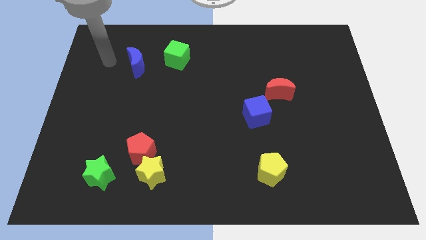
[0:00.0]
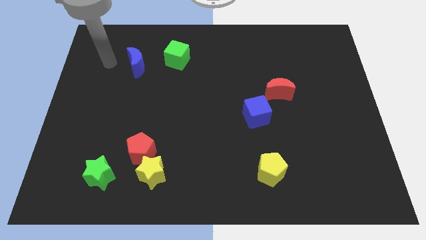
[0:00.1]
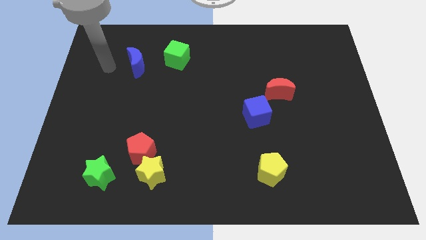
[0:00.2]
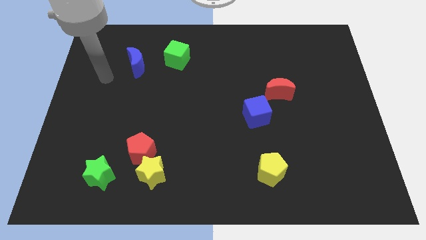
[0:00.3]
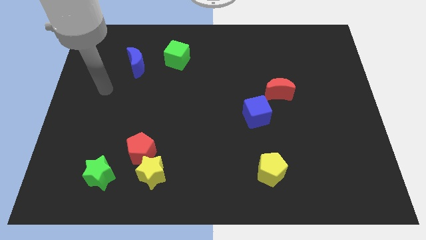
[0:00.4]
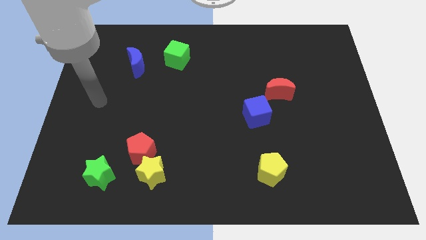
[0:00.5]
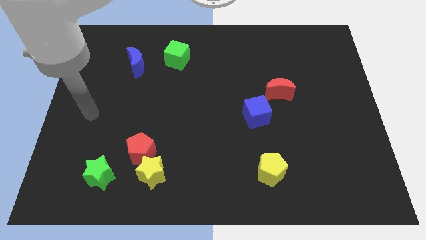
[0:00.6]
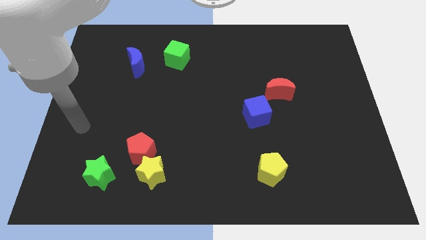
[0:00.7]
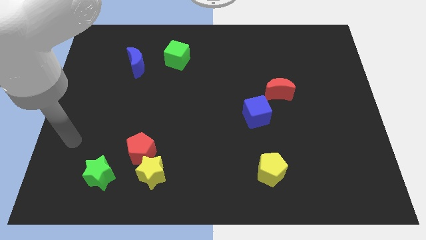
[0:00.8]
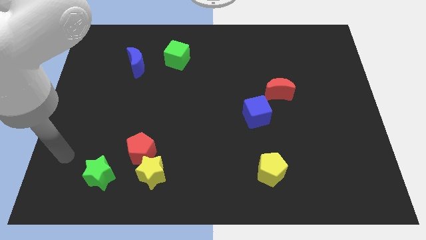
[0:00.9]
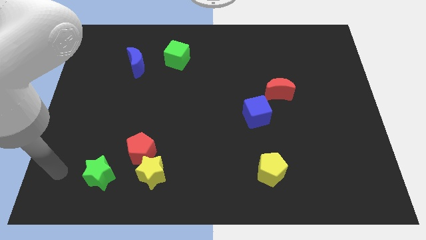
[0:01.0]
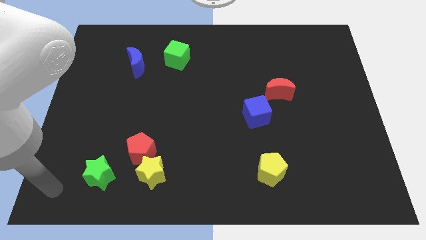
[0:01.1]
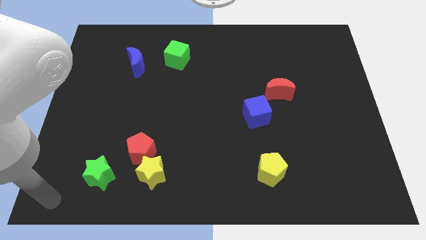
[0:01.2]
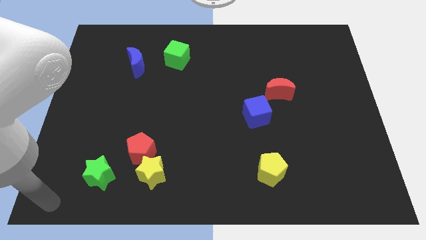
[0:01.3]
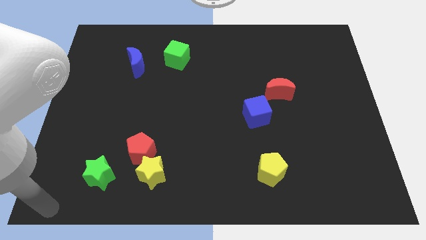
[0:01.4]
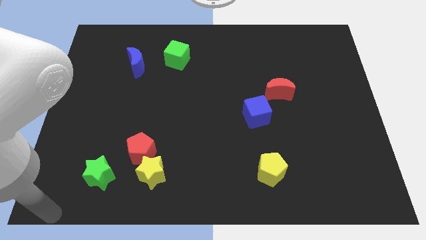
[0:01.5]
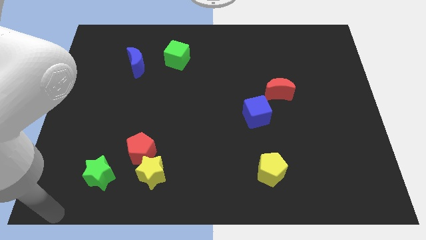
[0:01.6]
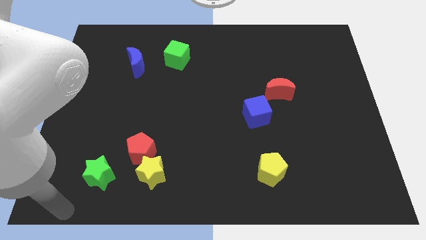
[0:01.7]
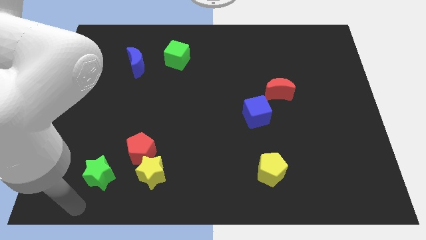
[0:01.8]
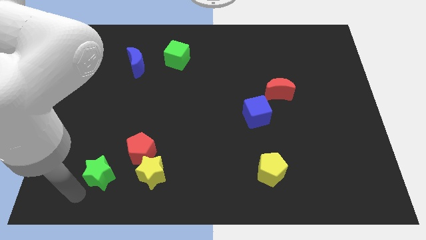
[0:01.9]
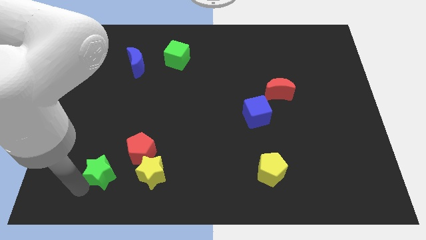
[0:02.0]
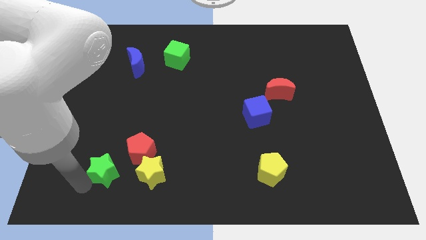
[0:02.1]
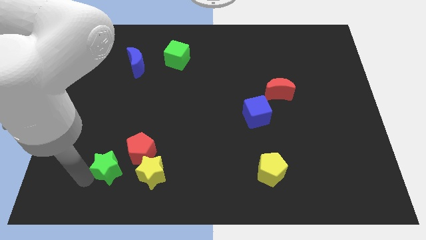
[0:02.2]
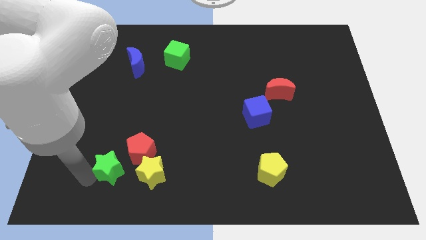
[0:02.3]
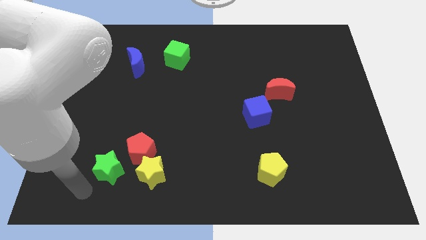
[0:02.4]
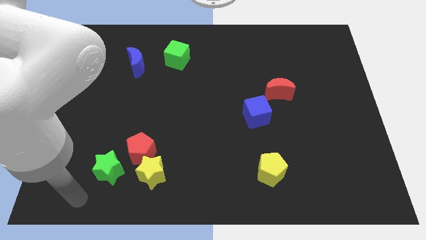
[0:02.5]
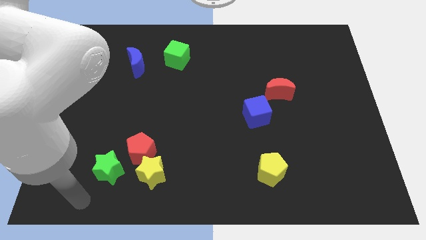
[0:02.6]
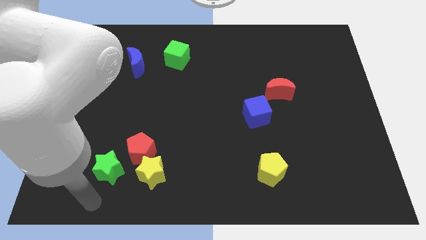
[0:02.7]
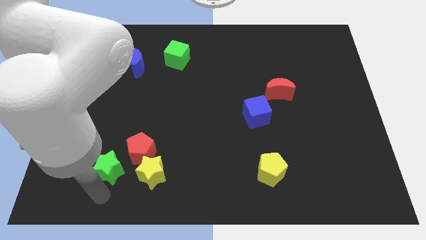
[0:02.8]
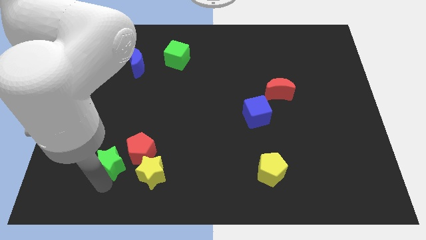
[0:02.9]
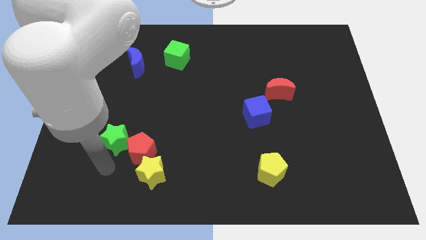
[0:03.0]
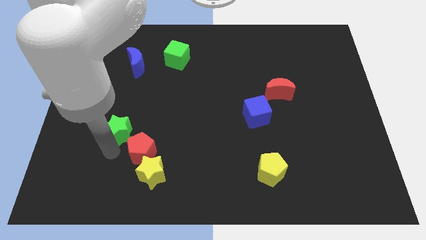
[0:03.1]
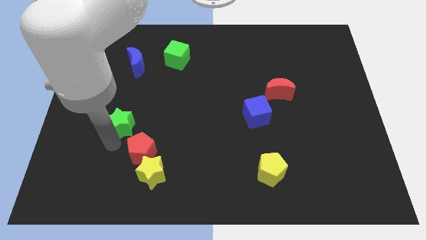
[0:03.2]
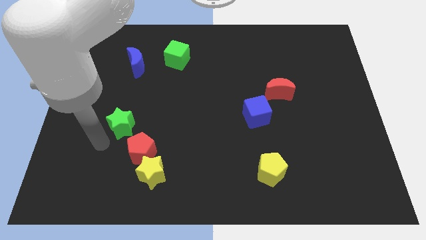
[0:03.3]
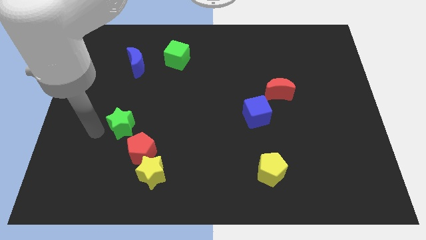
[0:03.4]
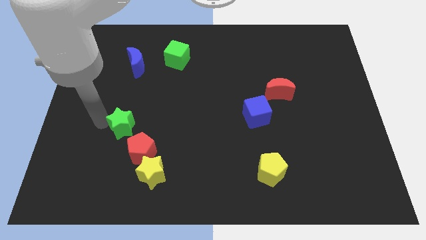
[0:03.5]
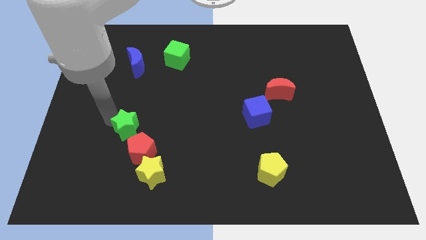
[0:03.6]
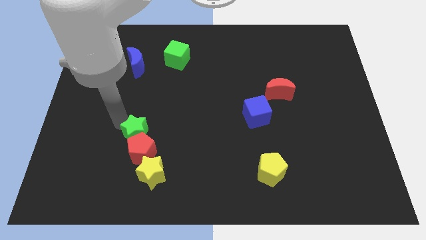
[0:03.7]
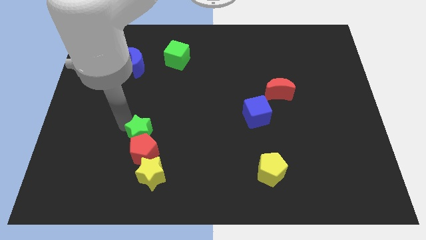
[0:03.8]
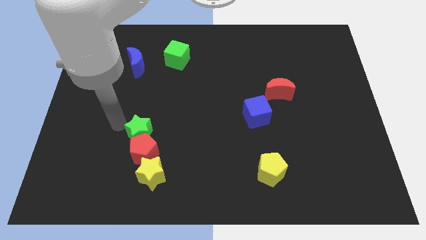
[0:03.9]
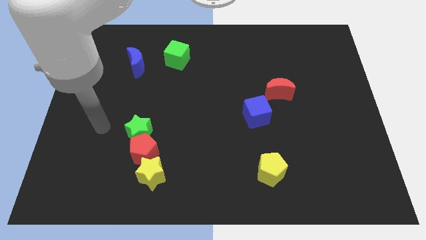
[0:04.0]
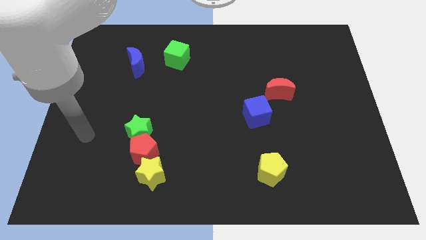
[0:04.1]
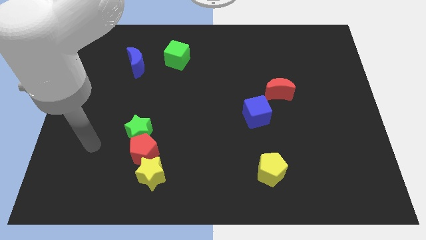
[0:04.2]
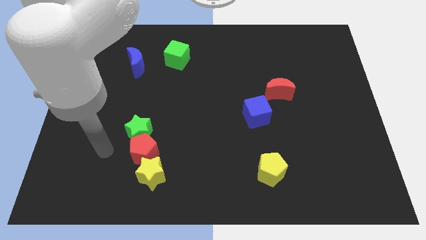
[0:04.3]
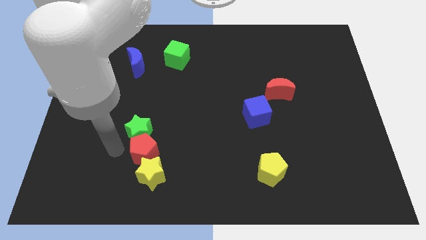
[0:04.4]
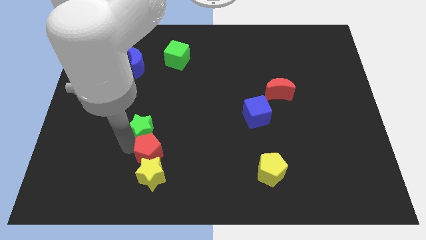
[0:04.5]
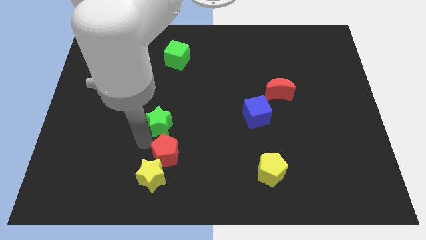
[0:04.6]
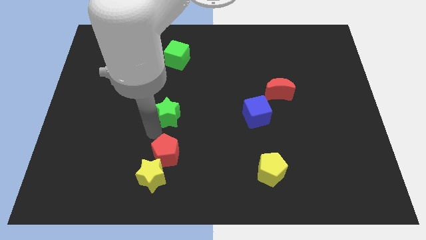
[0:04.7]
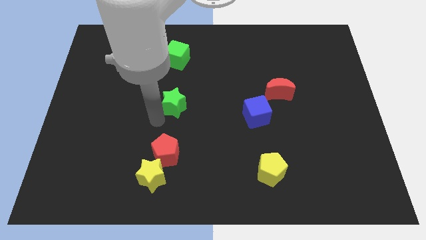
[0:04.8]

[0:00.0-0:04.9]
move the green star above the red pentagon

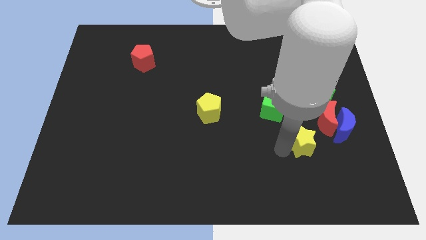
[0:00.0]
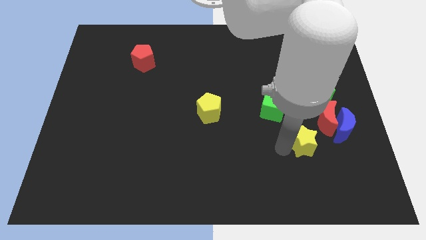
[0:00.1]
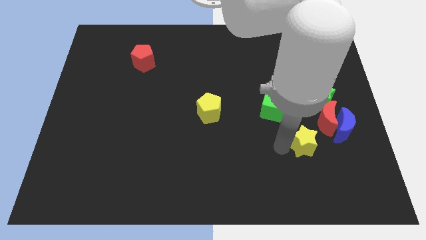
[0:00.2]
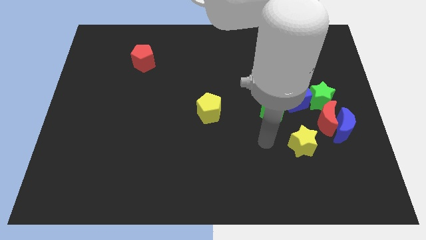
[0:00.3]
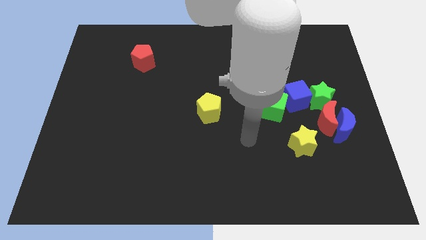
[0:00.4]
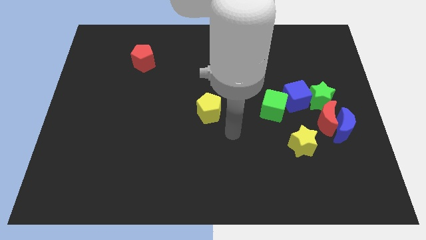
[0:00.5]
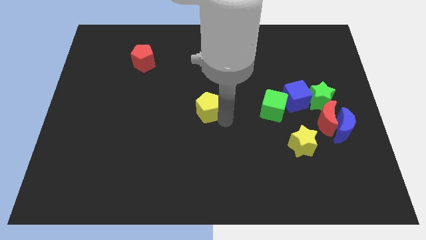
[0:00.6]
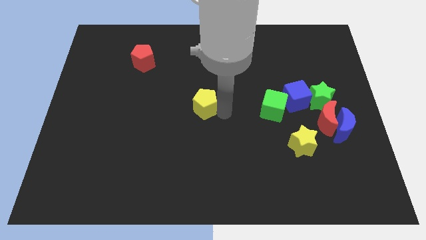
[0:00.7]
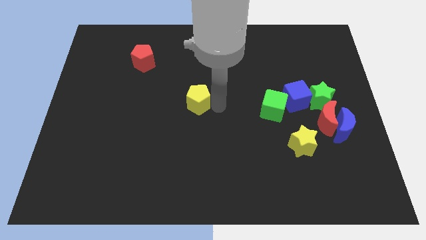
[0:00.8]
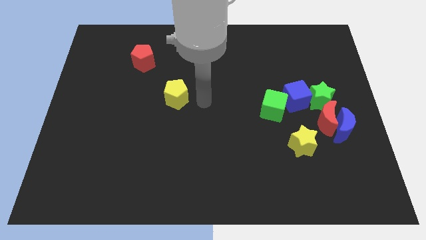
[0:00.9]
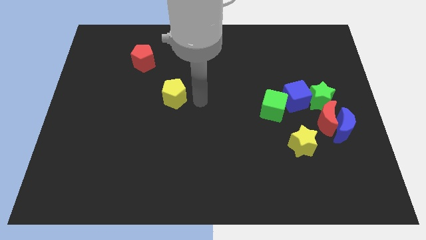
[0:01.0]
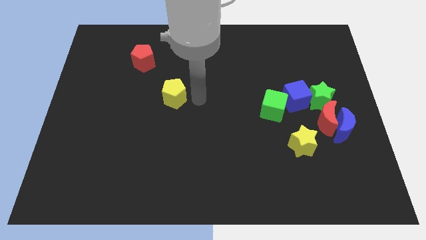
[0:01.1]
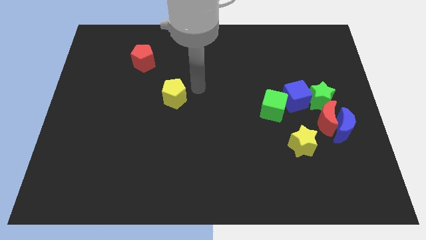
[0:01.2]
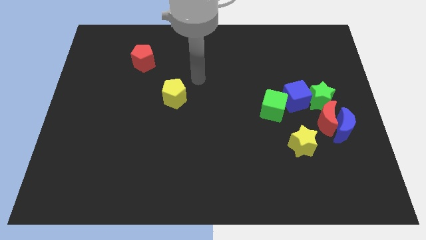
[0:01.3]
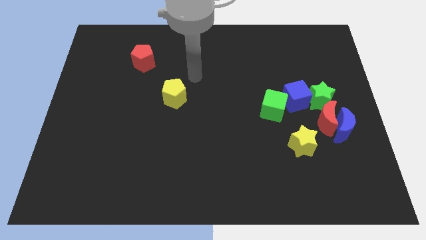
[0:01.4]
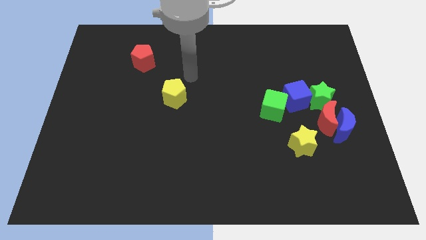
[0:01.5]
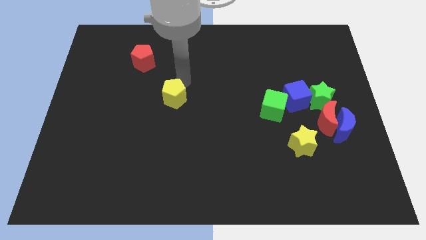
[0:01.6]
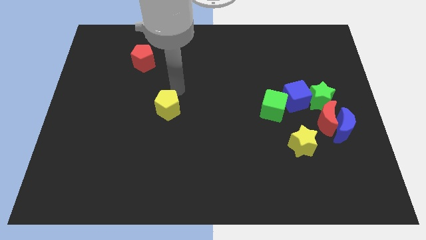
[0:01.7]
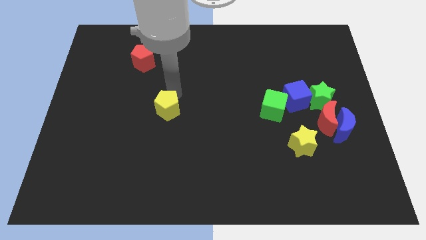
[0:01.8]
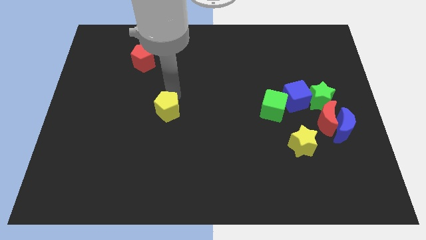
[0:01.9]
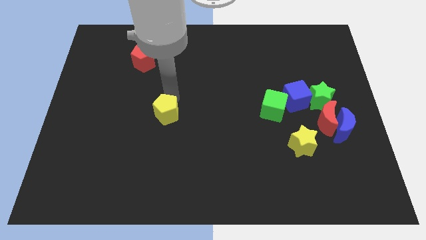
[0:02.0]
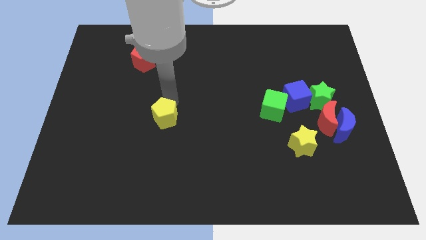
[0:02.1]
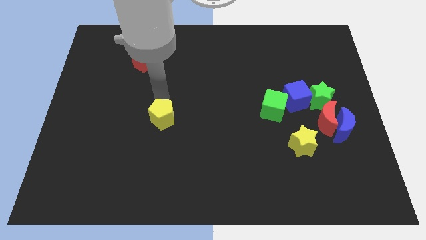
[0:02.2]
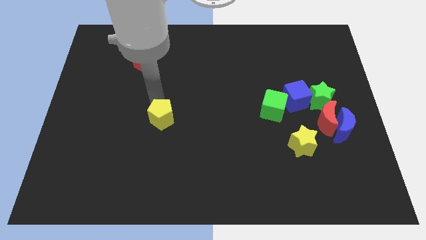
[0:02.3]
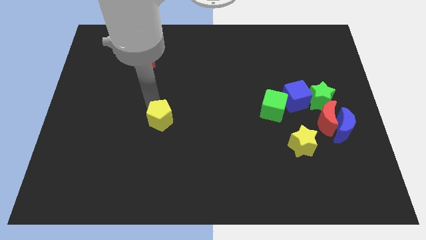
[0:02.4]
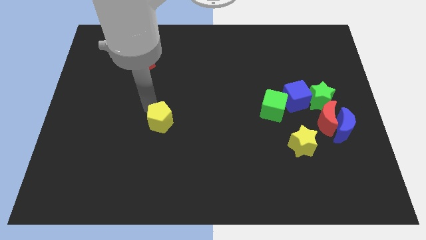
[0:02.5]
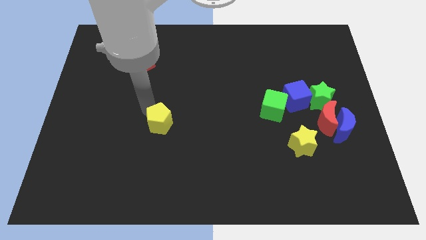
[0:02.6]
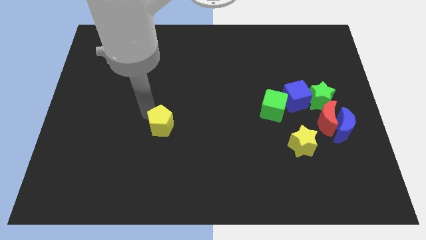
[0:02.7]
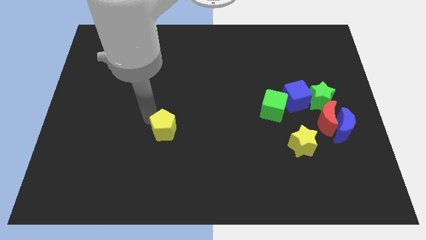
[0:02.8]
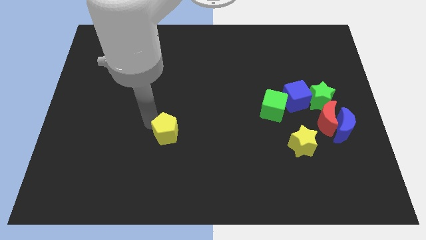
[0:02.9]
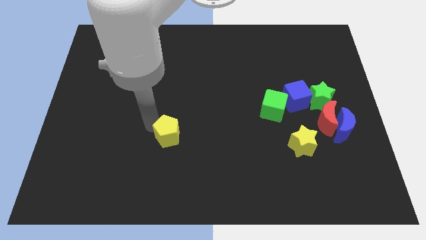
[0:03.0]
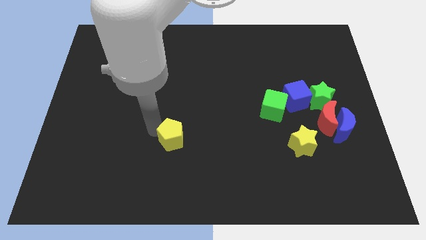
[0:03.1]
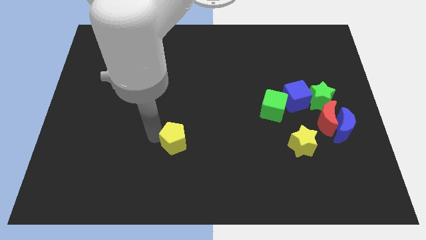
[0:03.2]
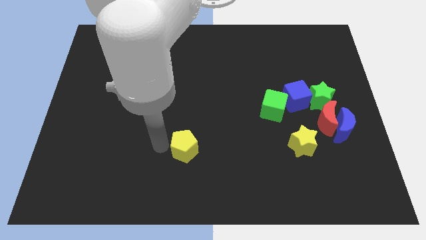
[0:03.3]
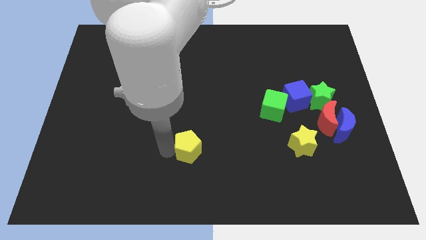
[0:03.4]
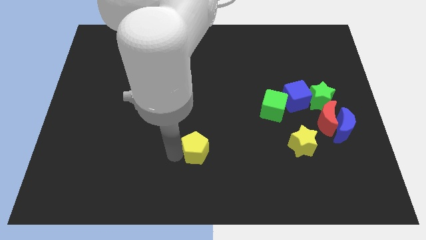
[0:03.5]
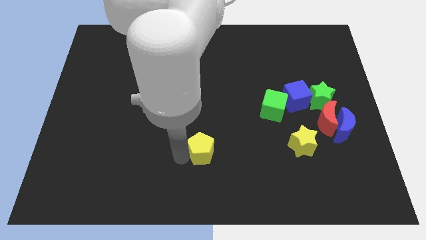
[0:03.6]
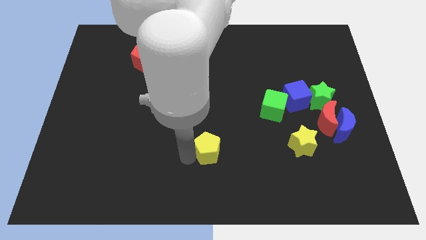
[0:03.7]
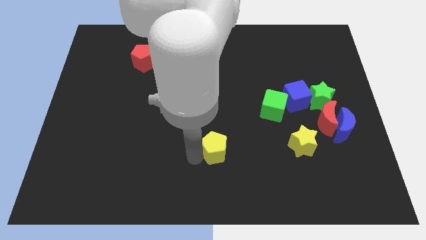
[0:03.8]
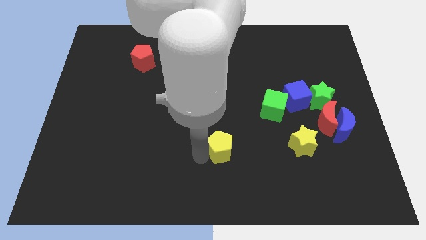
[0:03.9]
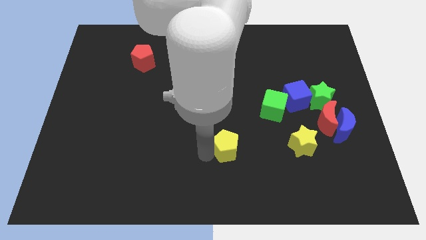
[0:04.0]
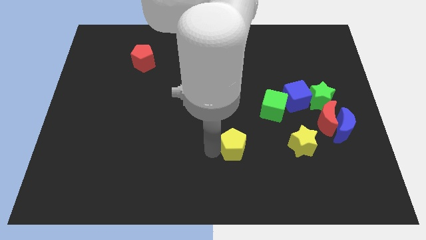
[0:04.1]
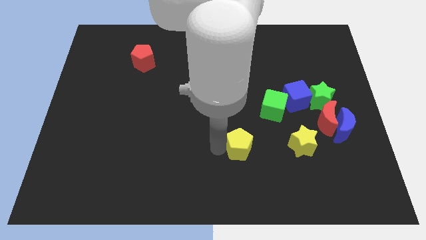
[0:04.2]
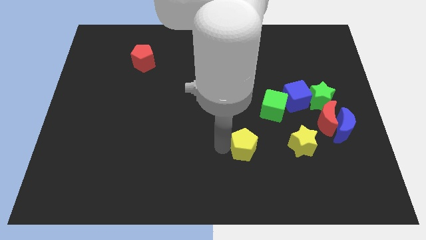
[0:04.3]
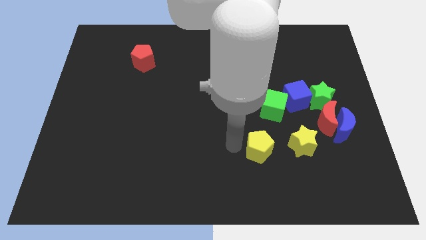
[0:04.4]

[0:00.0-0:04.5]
place the yellow pentagon left to the yellow star
